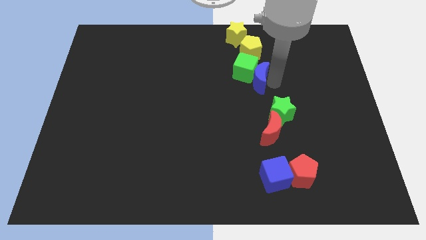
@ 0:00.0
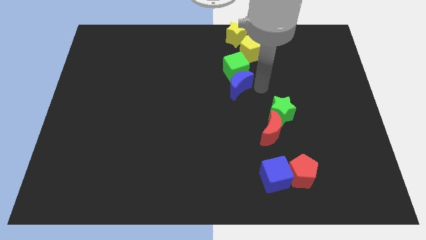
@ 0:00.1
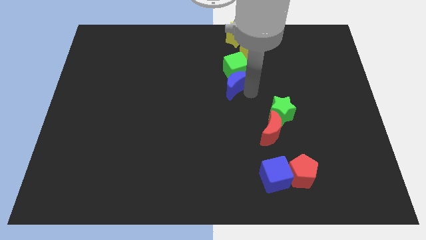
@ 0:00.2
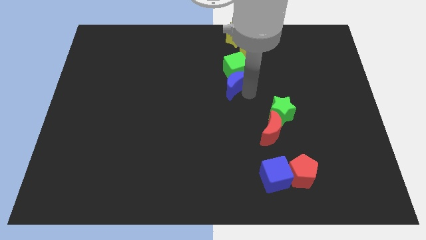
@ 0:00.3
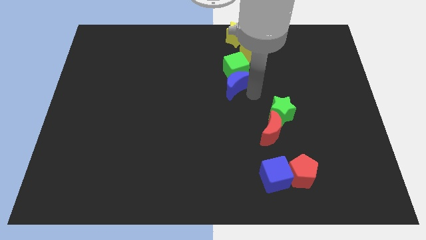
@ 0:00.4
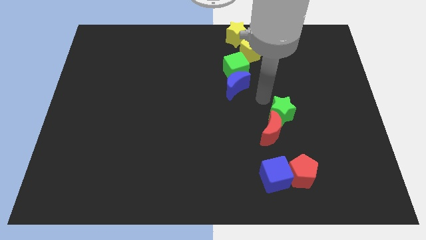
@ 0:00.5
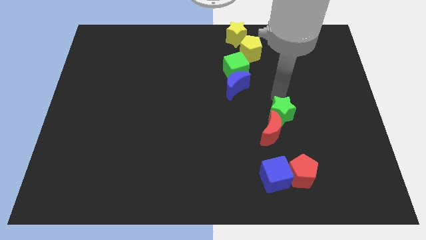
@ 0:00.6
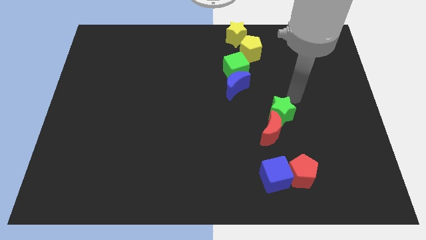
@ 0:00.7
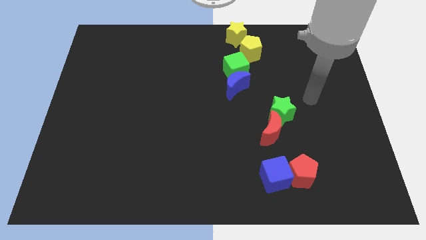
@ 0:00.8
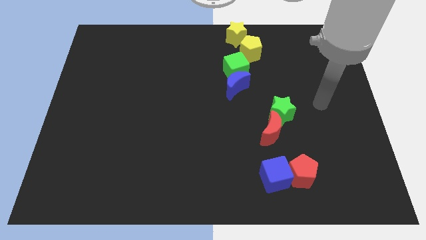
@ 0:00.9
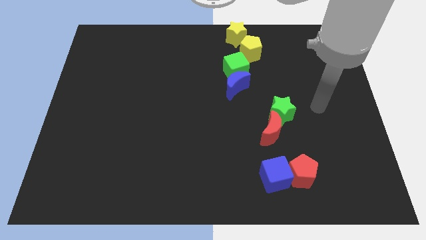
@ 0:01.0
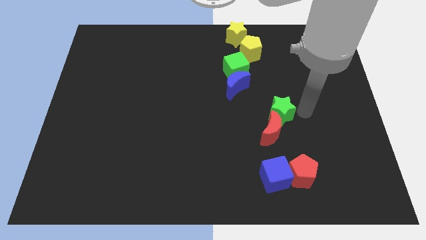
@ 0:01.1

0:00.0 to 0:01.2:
push the green cube slightly with the blue moon

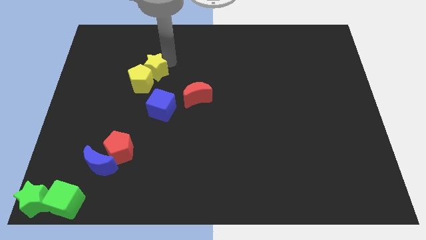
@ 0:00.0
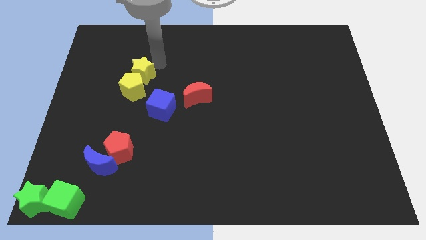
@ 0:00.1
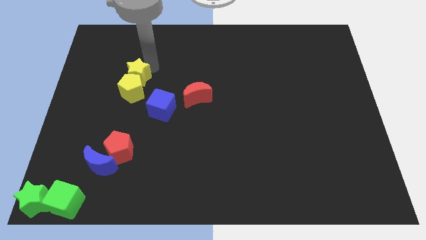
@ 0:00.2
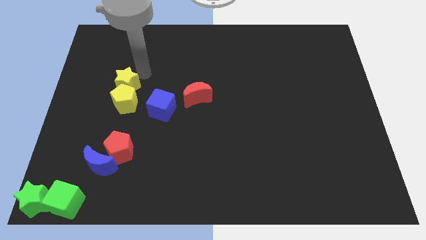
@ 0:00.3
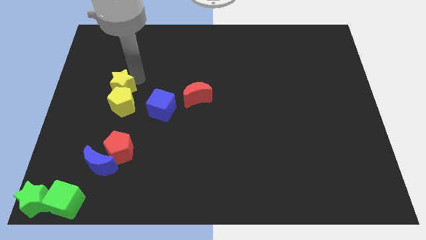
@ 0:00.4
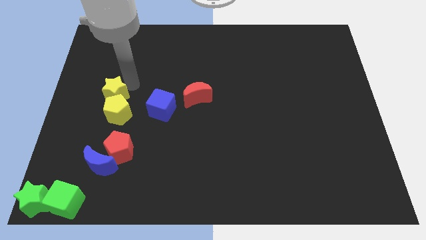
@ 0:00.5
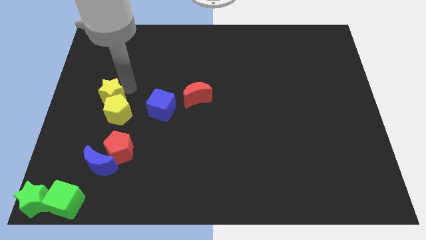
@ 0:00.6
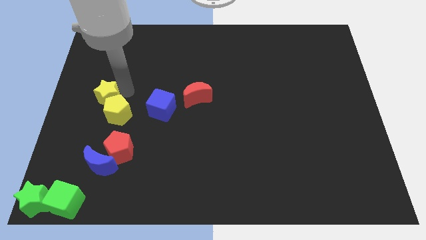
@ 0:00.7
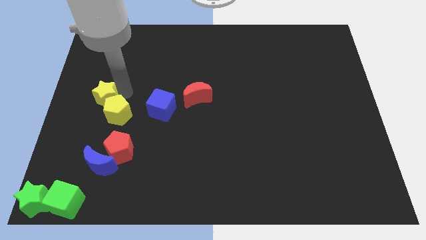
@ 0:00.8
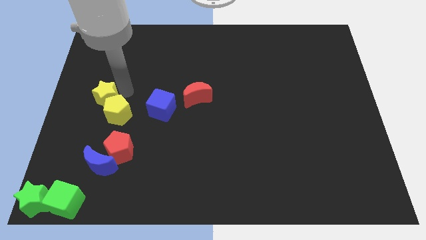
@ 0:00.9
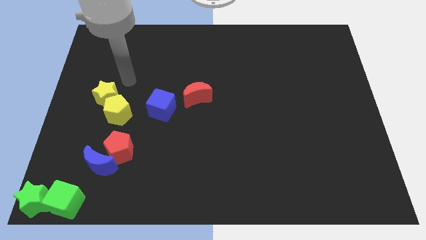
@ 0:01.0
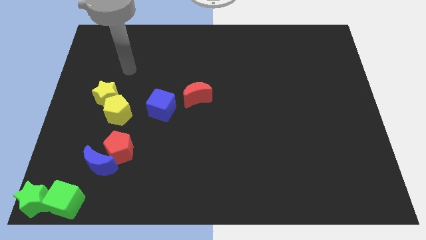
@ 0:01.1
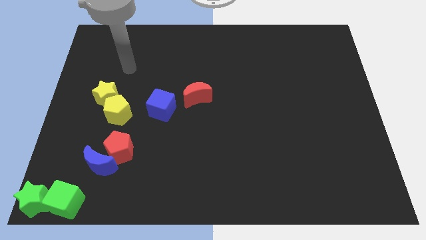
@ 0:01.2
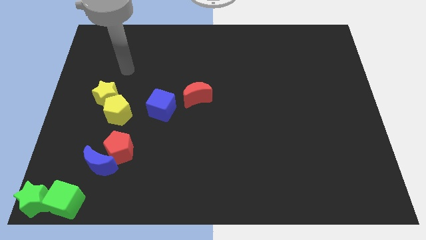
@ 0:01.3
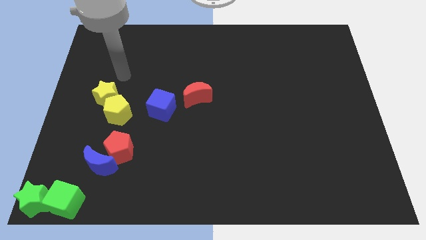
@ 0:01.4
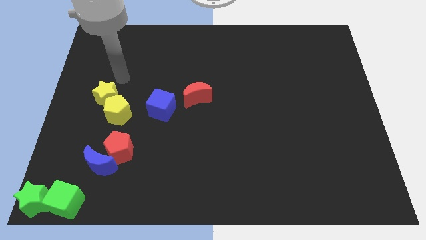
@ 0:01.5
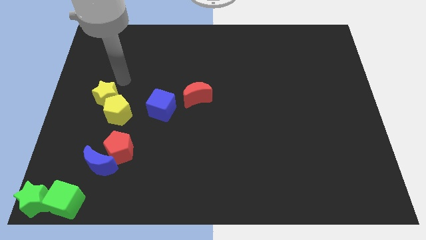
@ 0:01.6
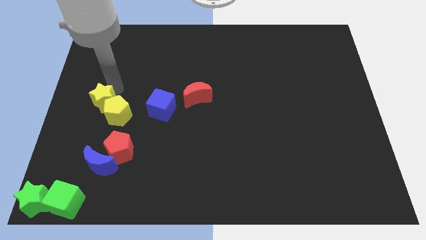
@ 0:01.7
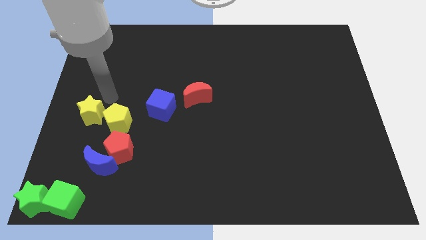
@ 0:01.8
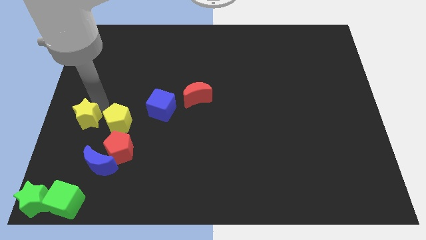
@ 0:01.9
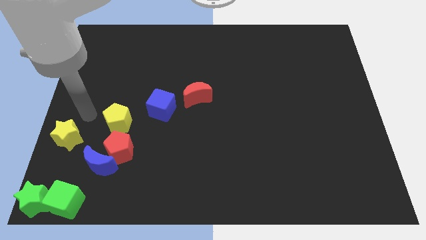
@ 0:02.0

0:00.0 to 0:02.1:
push the yellow star and yellow pentagon to the center left of the board

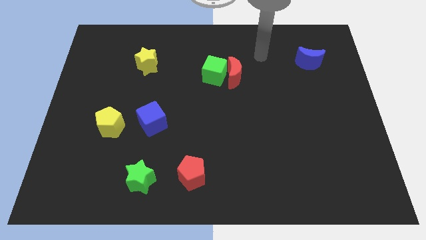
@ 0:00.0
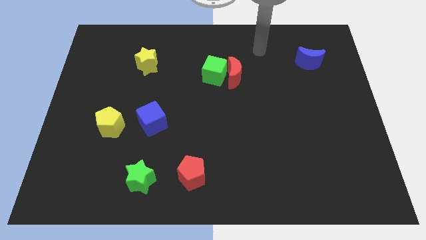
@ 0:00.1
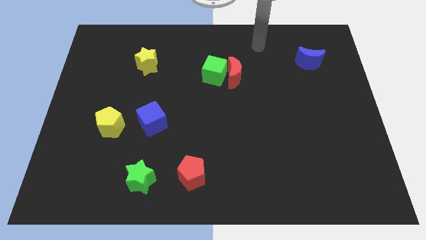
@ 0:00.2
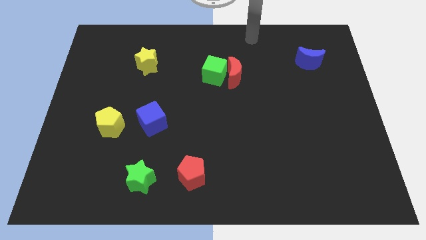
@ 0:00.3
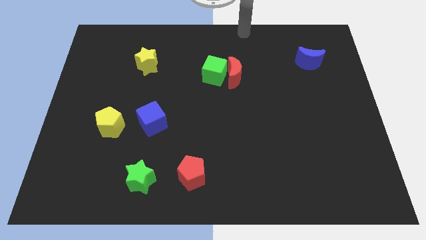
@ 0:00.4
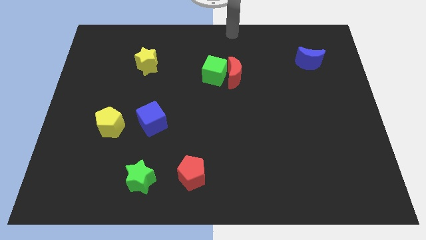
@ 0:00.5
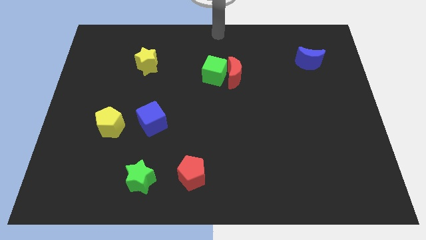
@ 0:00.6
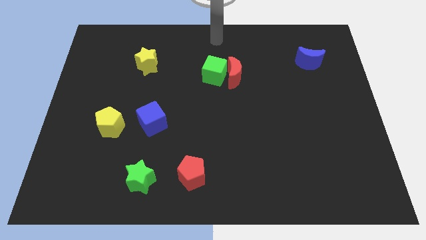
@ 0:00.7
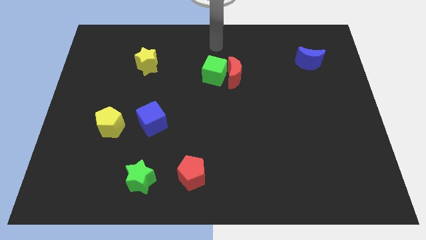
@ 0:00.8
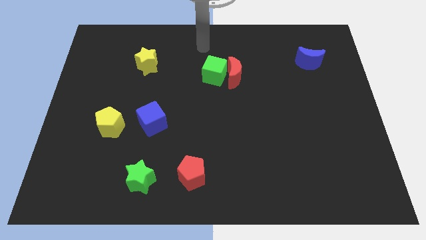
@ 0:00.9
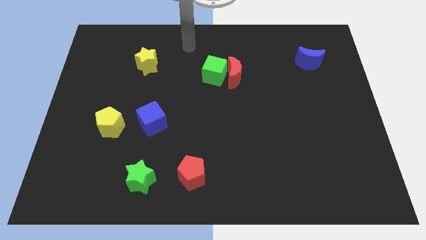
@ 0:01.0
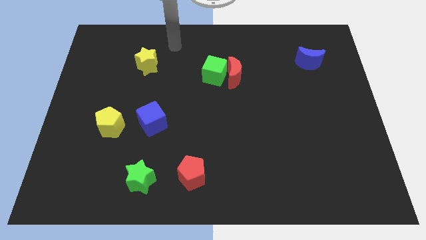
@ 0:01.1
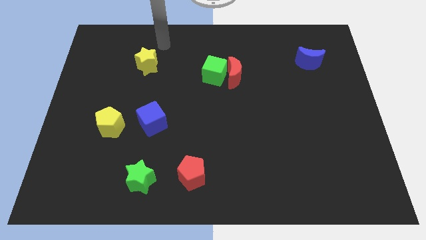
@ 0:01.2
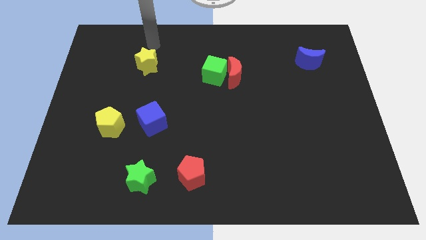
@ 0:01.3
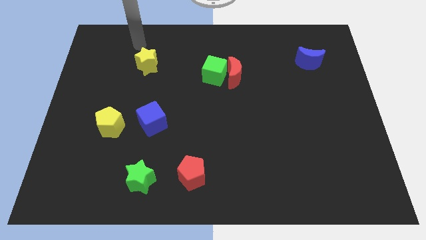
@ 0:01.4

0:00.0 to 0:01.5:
point your arm above the yellow star

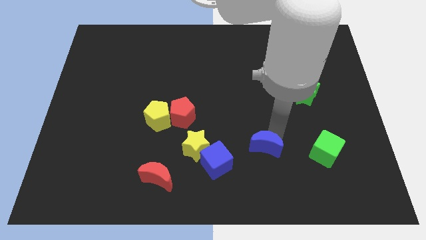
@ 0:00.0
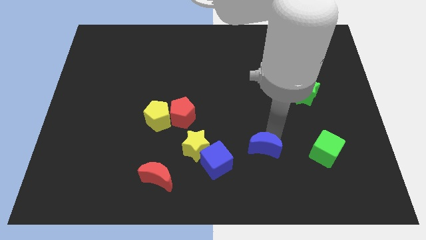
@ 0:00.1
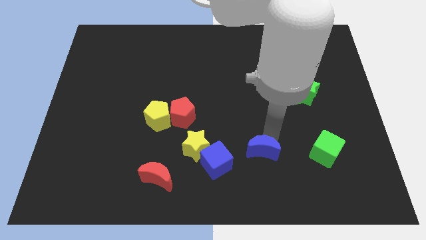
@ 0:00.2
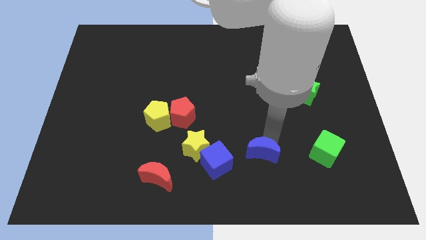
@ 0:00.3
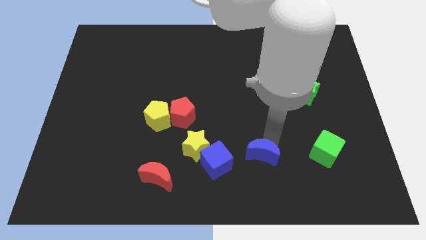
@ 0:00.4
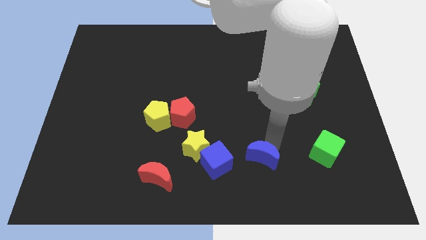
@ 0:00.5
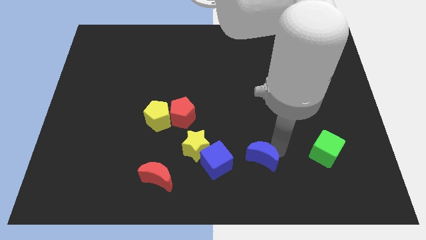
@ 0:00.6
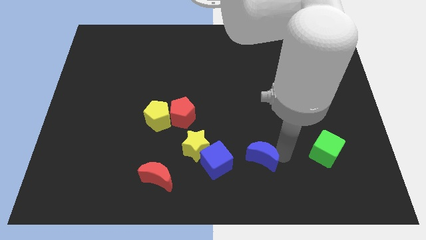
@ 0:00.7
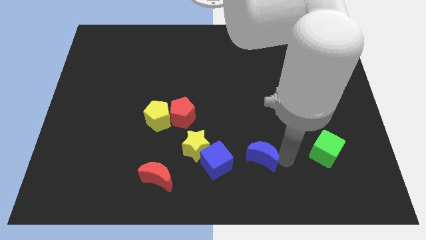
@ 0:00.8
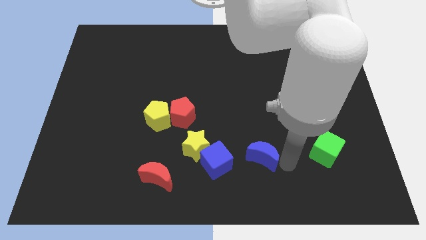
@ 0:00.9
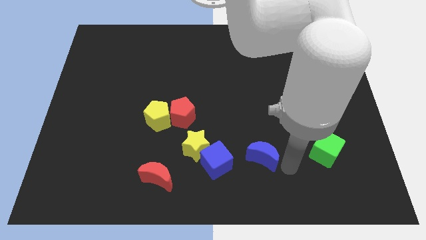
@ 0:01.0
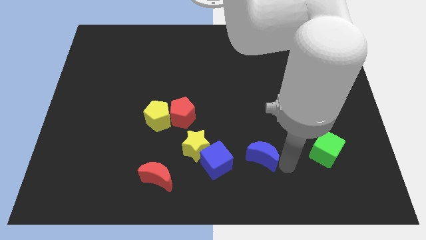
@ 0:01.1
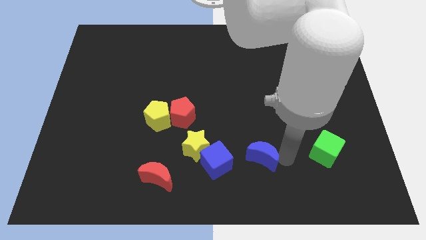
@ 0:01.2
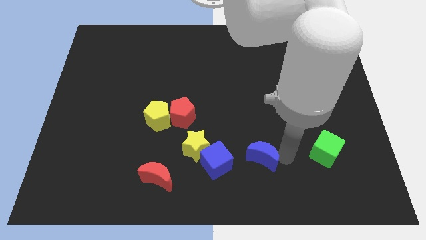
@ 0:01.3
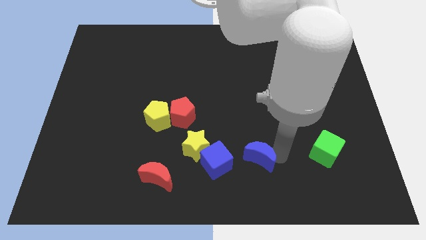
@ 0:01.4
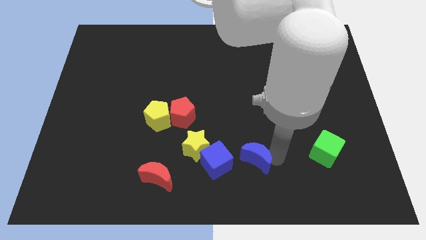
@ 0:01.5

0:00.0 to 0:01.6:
push the blue crescent to the right of the blue cube

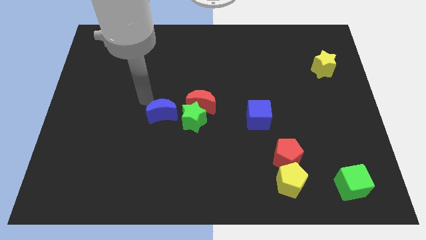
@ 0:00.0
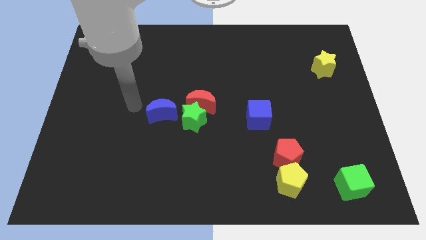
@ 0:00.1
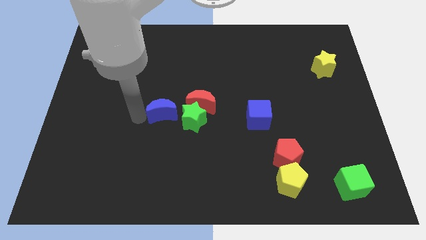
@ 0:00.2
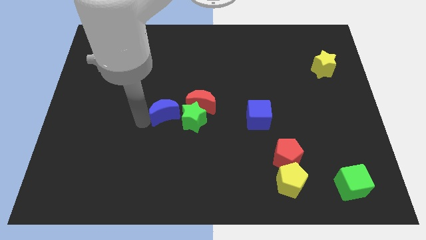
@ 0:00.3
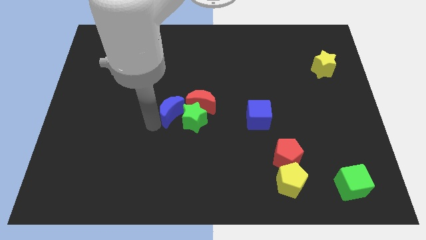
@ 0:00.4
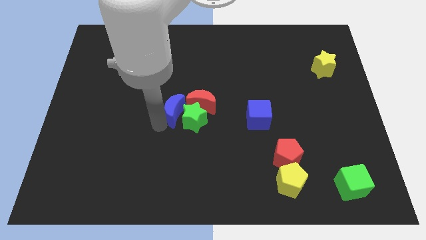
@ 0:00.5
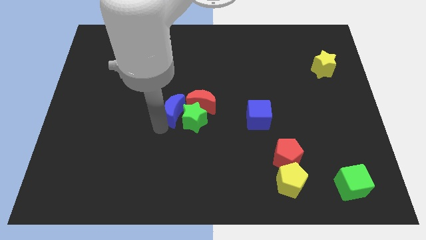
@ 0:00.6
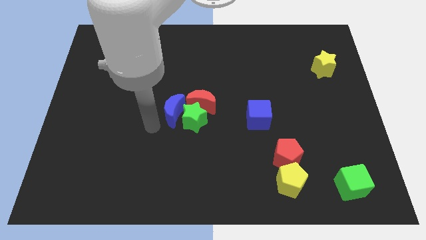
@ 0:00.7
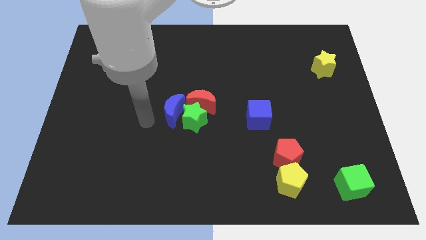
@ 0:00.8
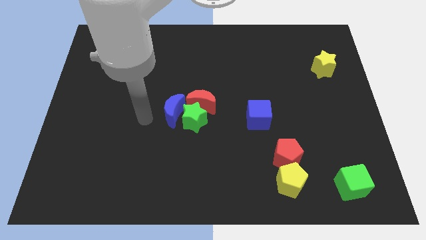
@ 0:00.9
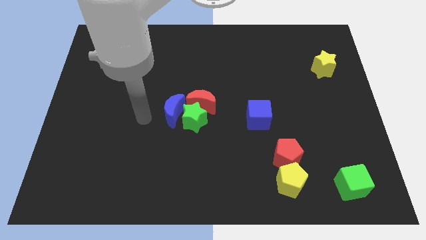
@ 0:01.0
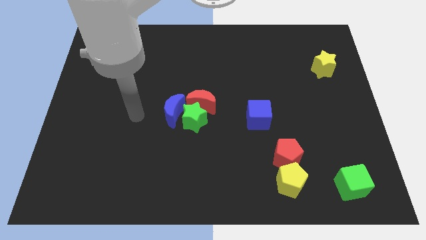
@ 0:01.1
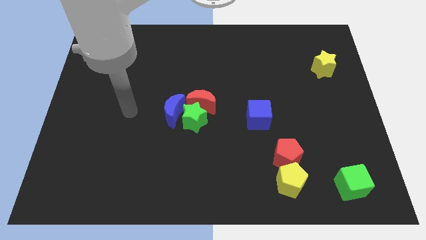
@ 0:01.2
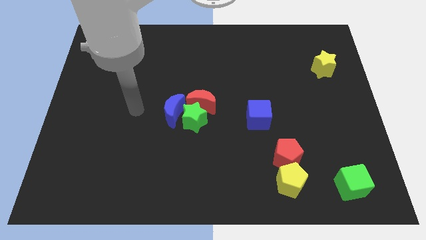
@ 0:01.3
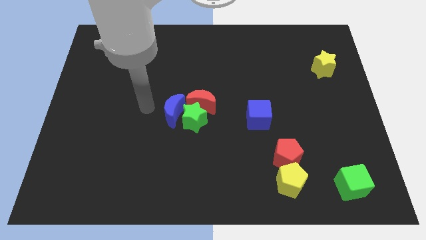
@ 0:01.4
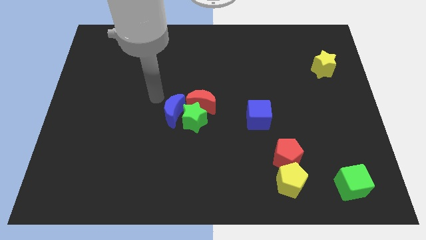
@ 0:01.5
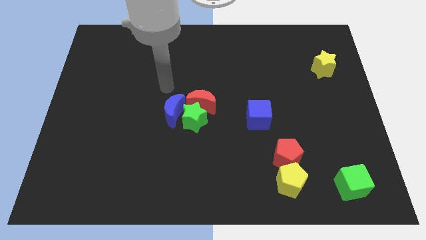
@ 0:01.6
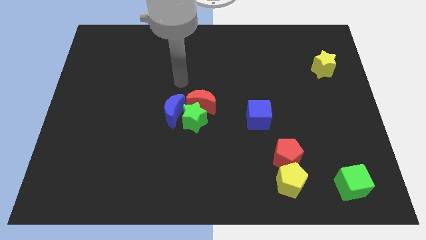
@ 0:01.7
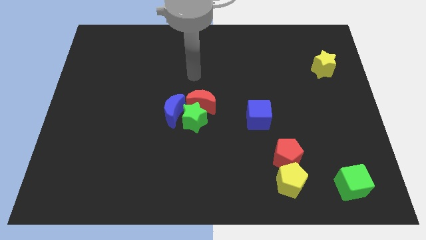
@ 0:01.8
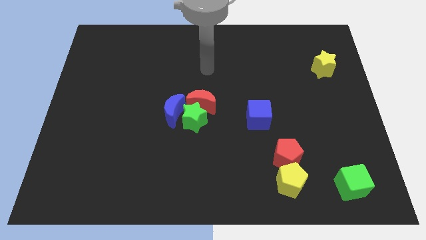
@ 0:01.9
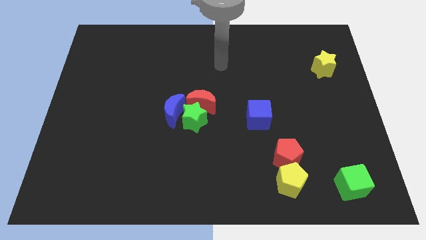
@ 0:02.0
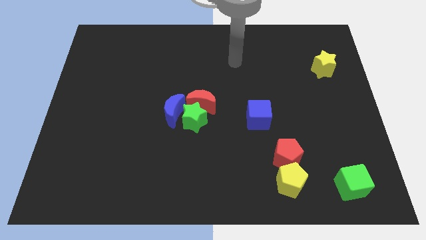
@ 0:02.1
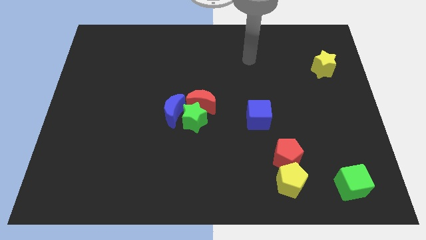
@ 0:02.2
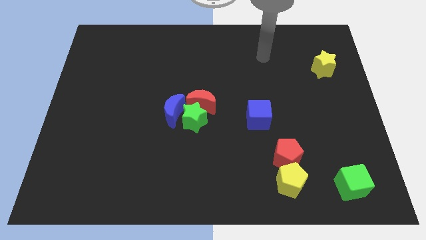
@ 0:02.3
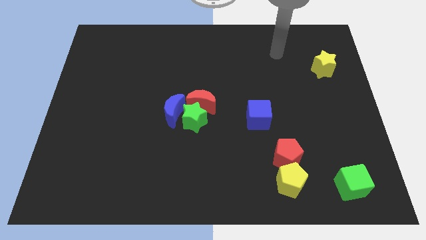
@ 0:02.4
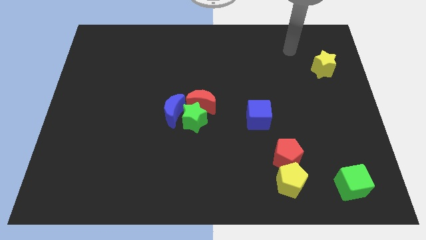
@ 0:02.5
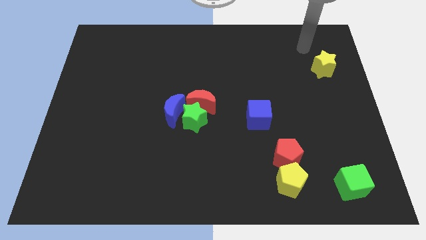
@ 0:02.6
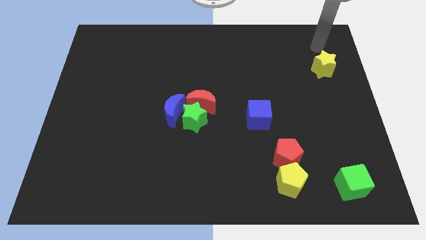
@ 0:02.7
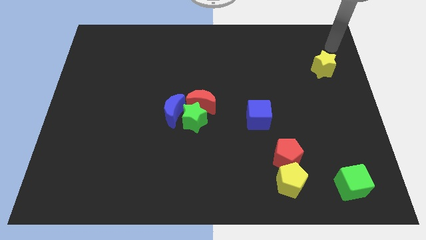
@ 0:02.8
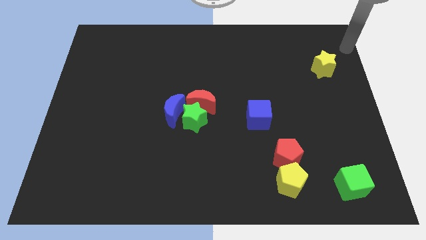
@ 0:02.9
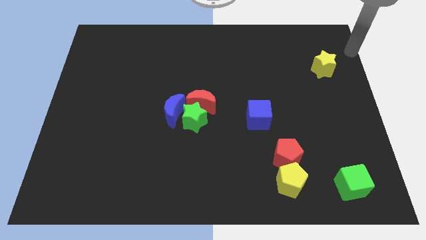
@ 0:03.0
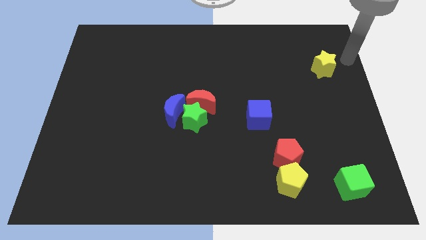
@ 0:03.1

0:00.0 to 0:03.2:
push the blue moon into the green star
